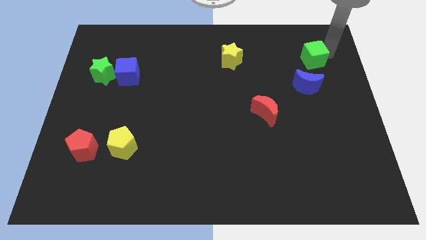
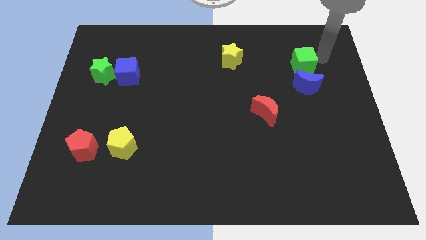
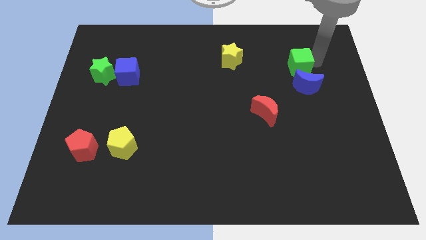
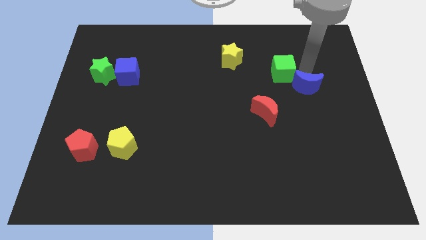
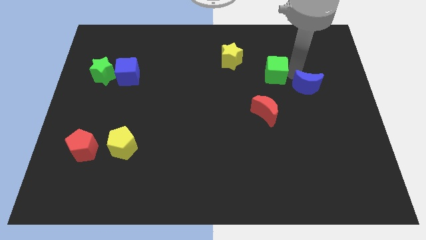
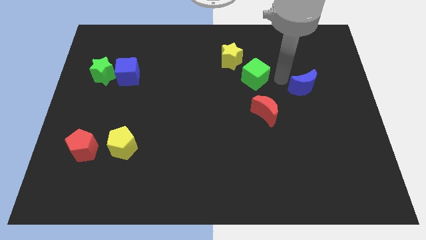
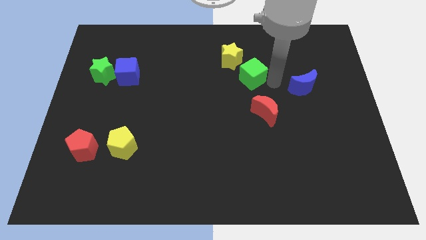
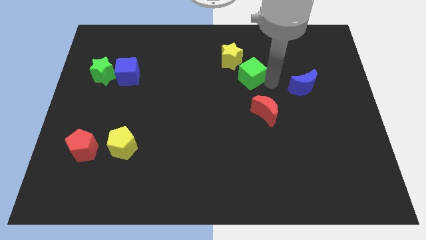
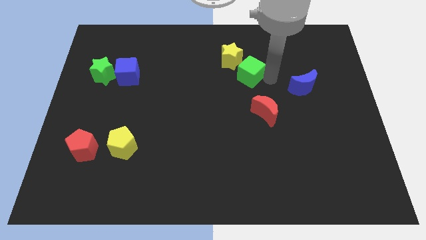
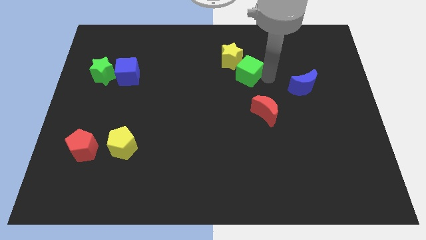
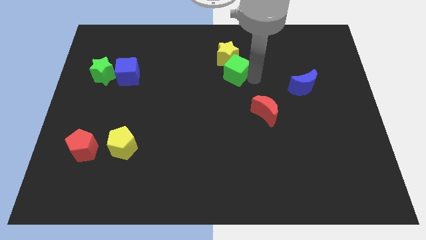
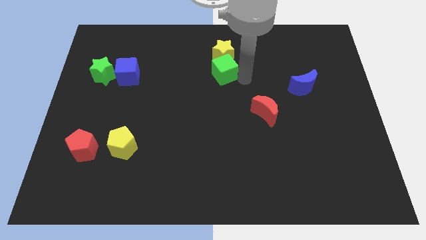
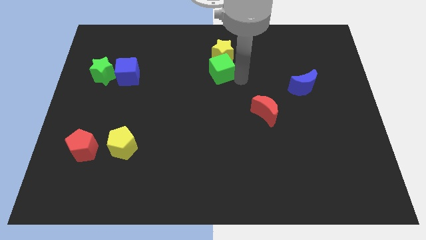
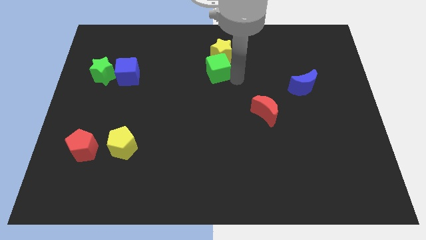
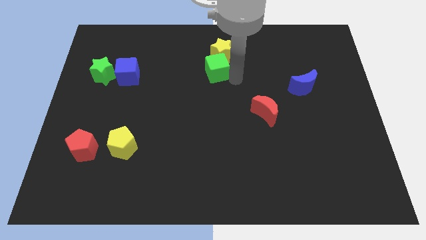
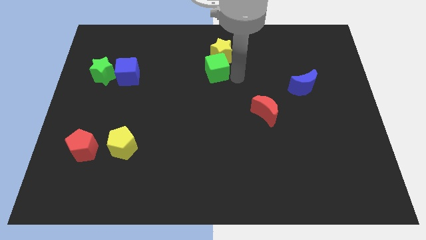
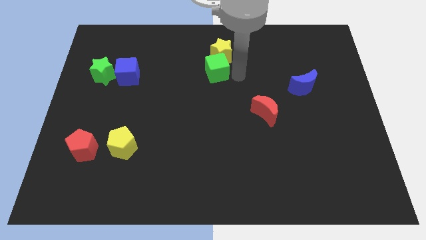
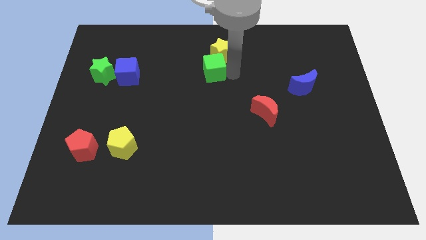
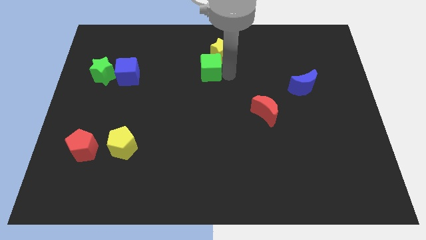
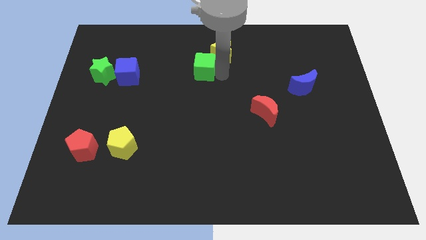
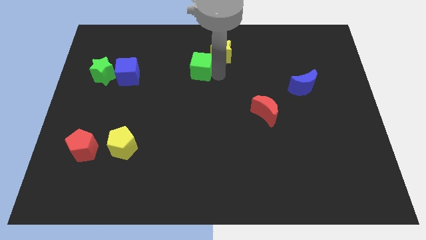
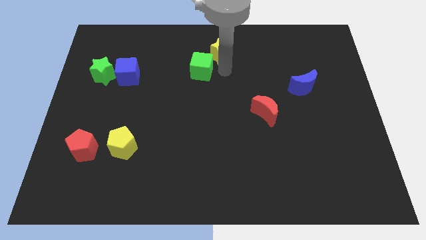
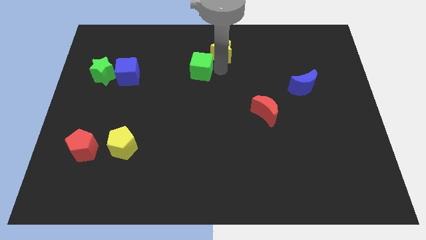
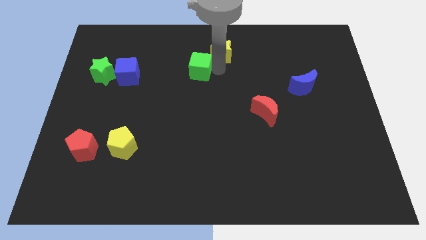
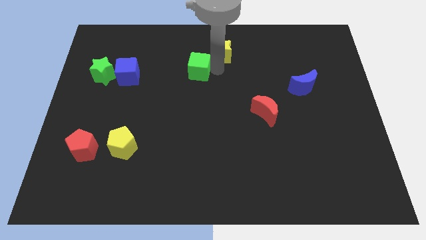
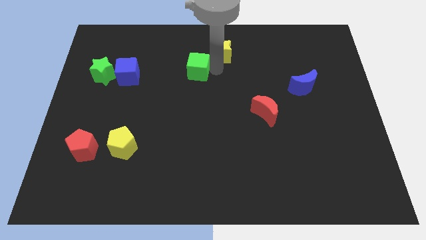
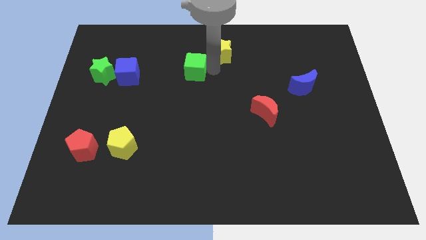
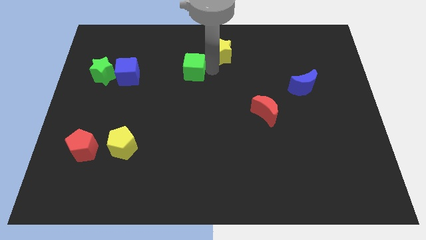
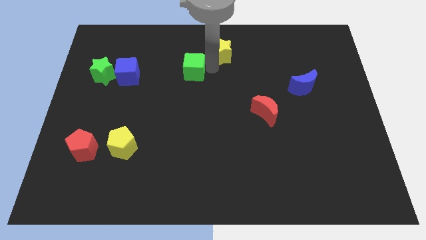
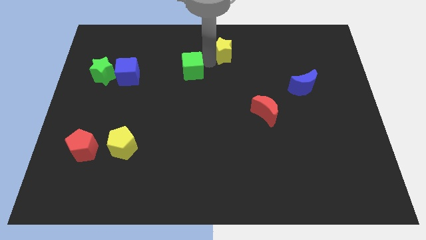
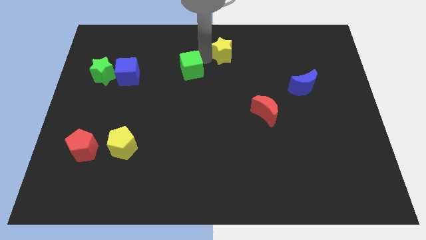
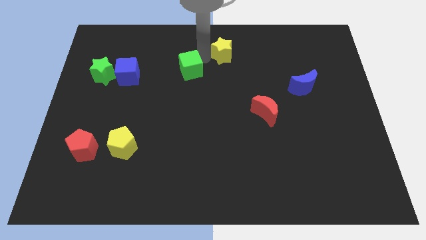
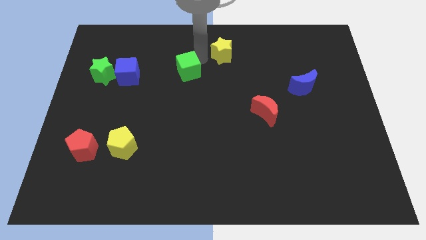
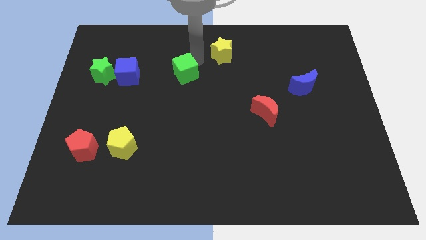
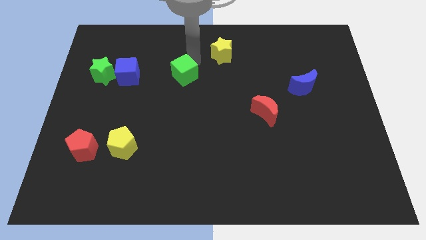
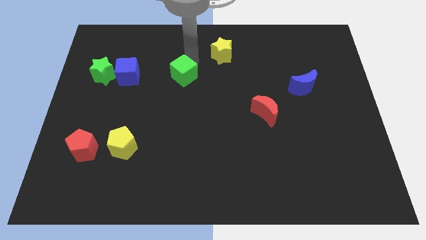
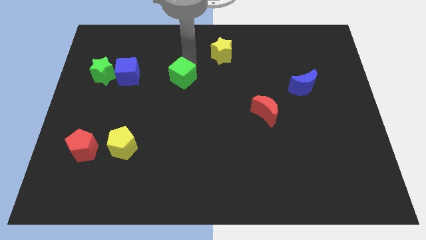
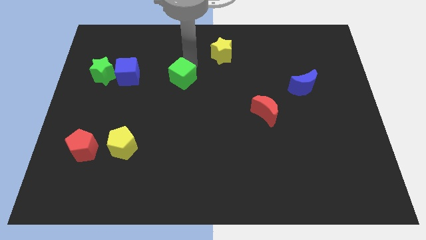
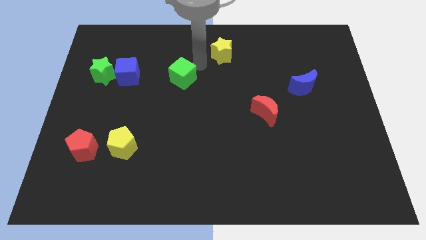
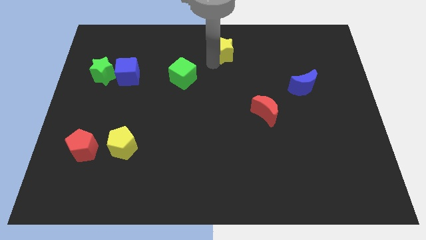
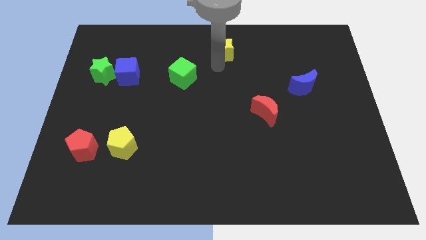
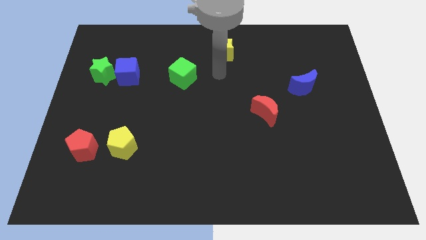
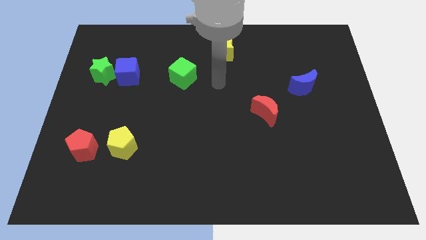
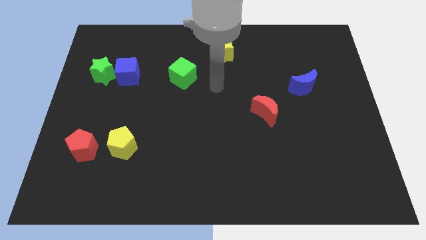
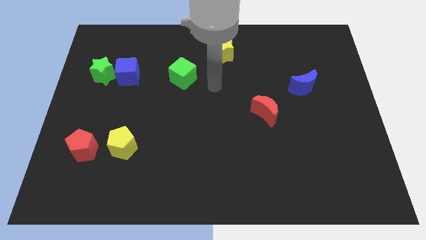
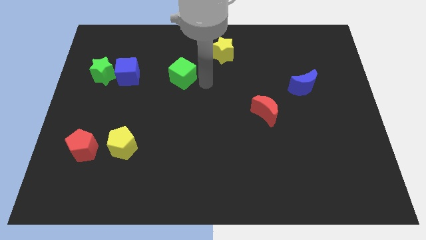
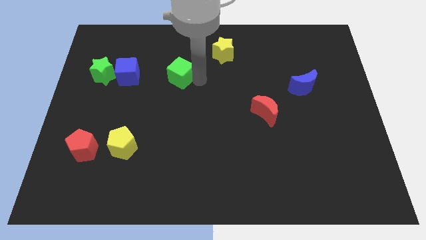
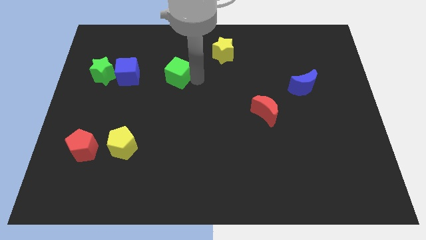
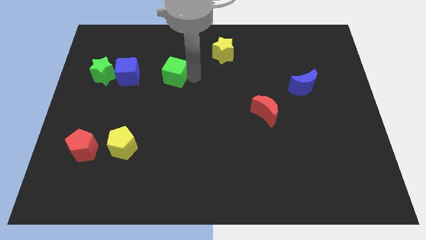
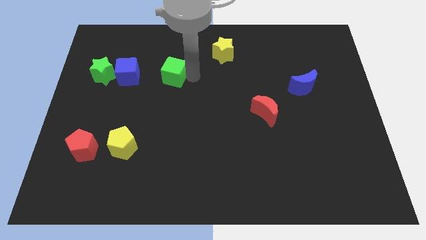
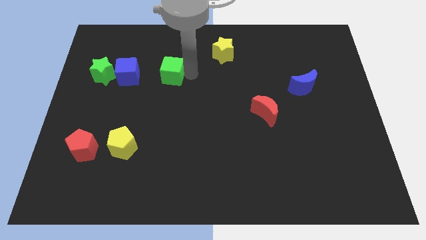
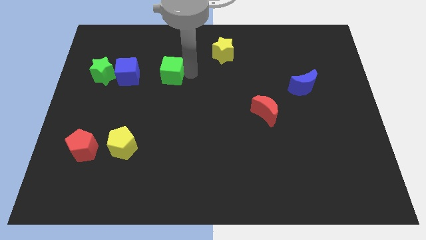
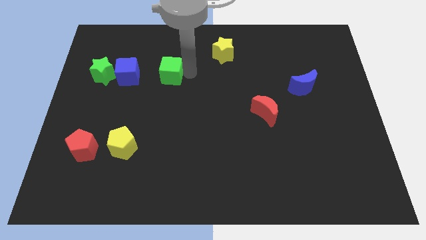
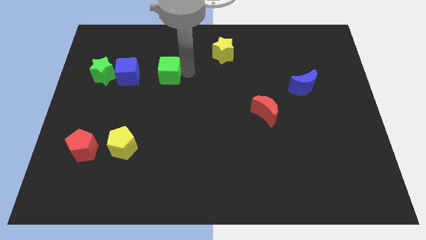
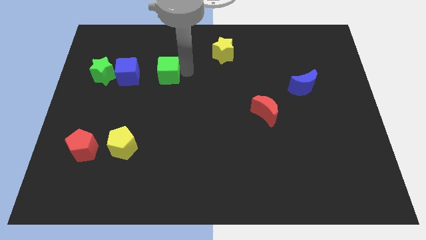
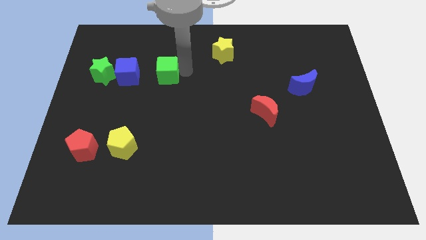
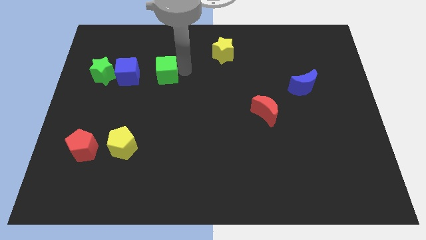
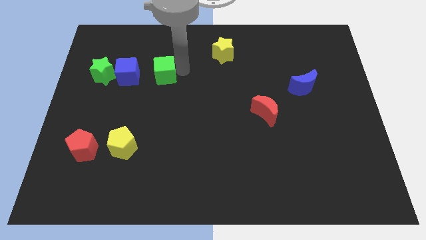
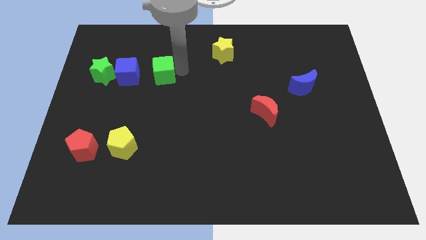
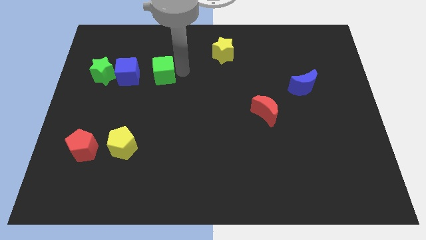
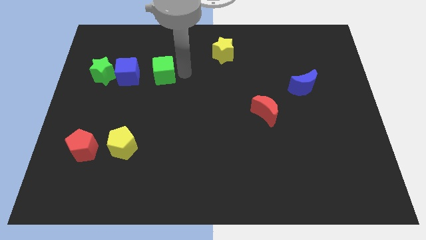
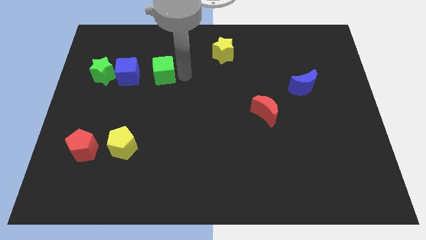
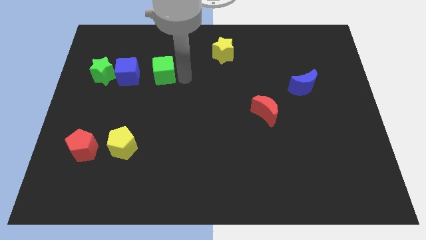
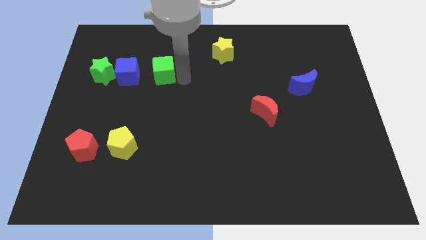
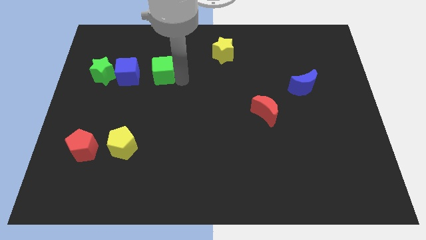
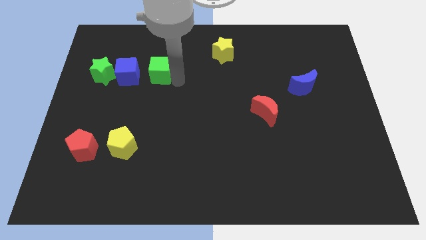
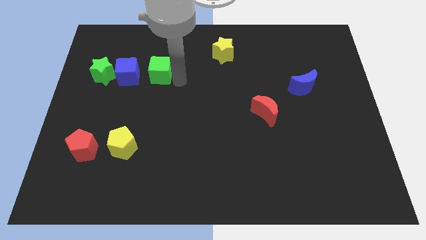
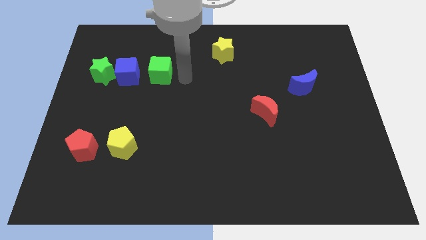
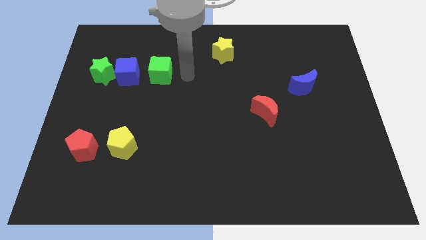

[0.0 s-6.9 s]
add the green cube to the horizontal line of the green star and the blue square

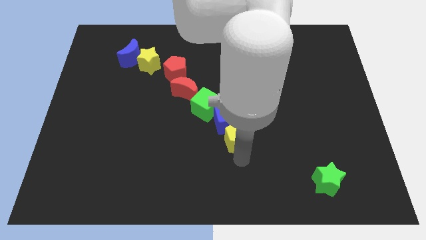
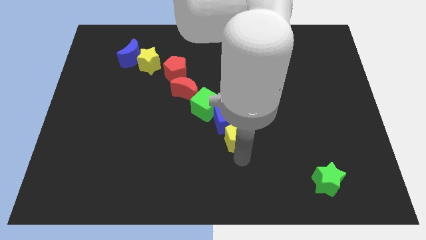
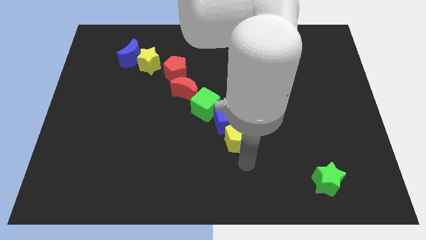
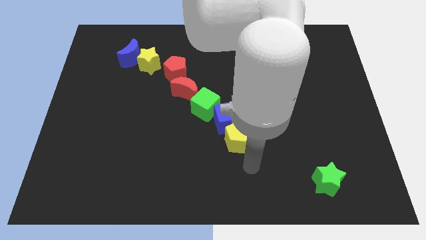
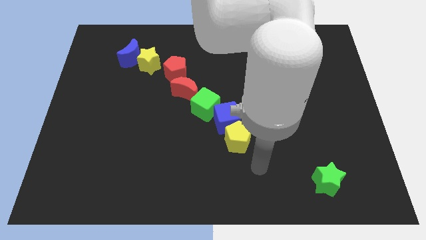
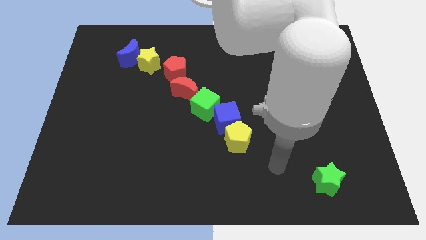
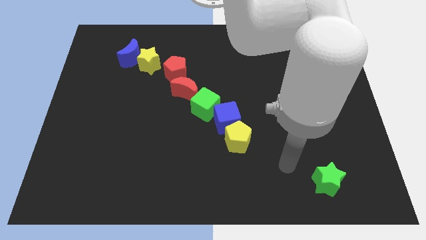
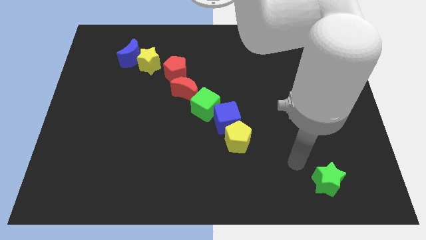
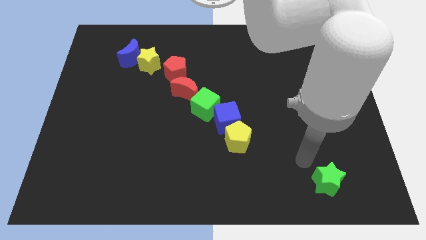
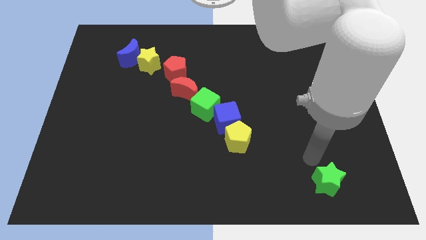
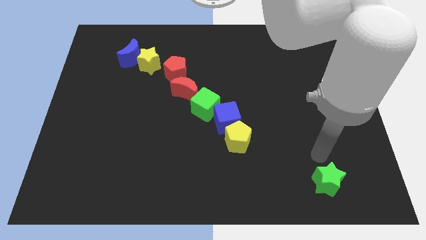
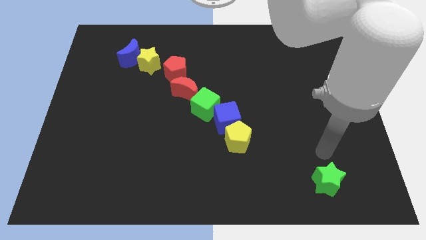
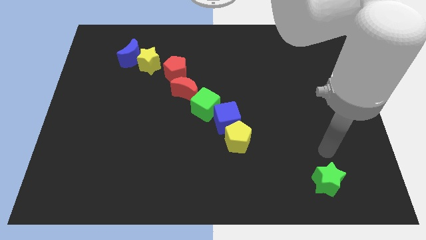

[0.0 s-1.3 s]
move the arm away from the yellow pentagon

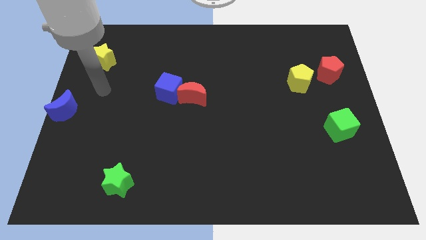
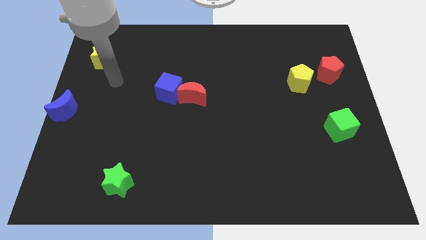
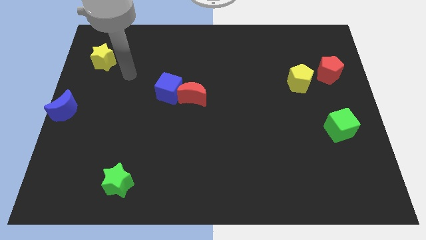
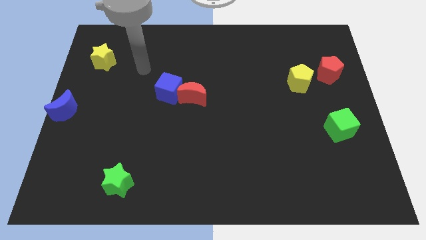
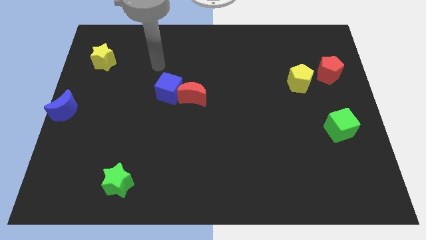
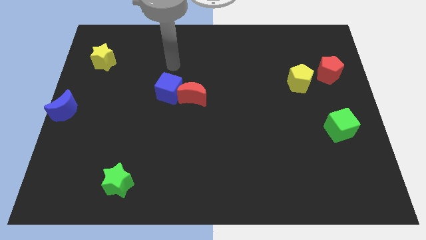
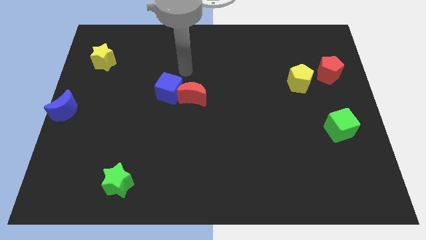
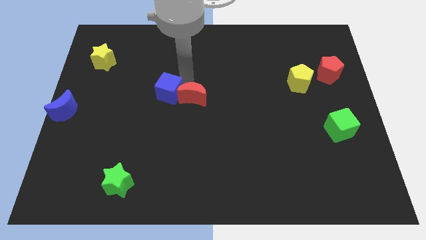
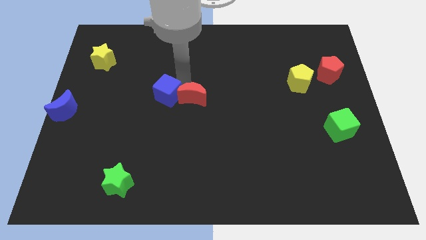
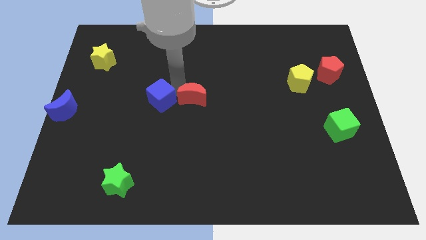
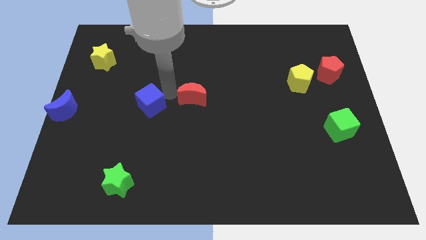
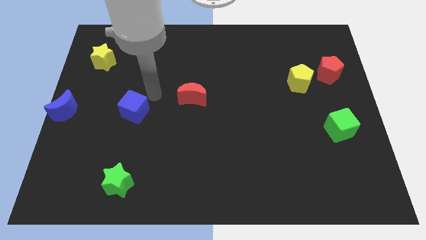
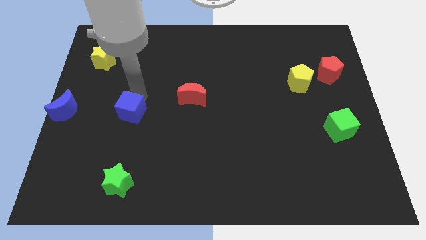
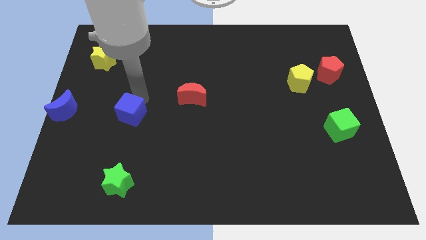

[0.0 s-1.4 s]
separate blue cube and red moon
